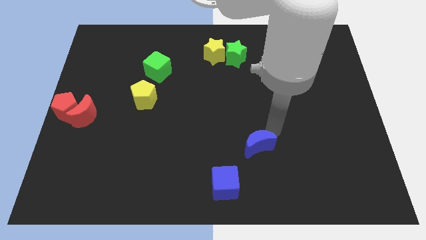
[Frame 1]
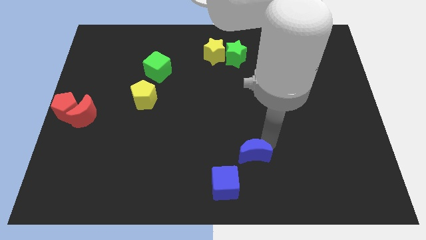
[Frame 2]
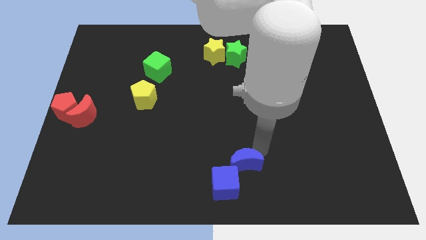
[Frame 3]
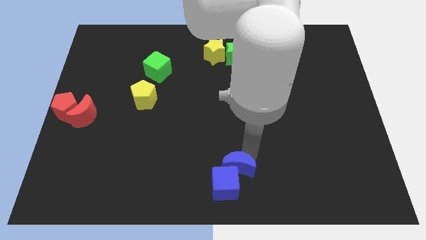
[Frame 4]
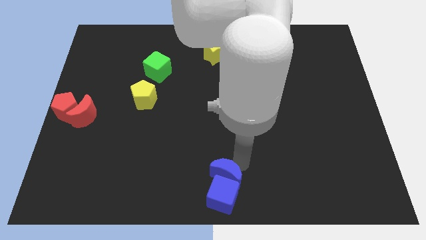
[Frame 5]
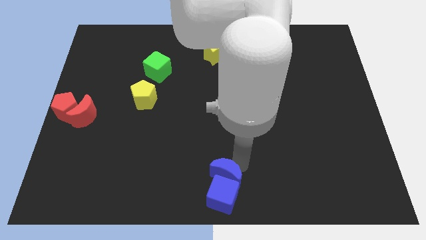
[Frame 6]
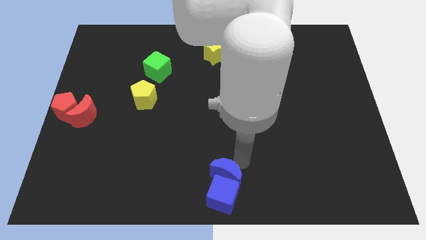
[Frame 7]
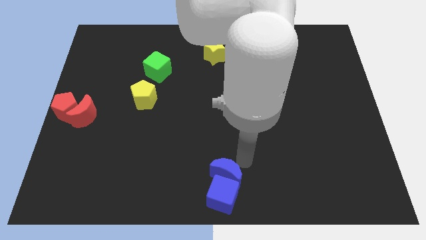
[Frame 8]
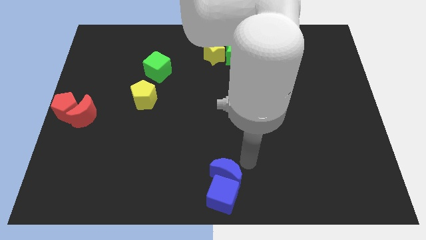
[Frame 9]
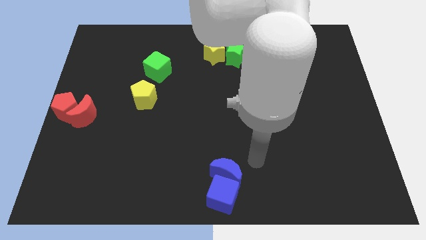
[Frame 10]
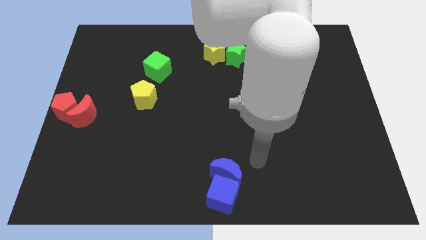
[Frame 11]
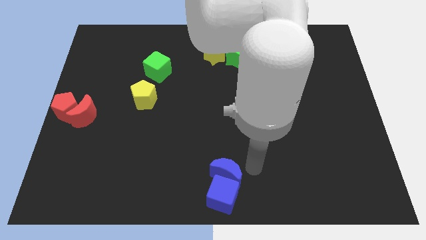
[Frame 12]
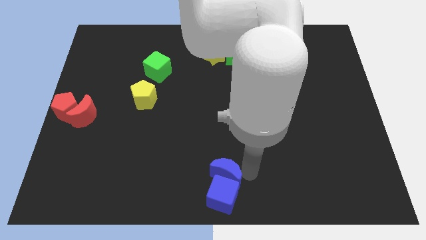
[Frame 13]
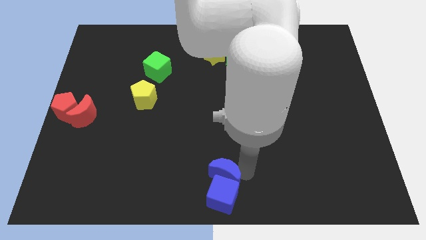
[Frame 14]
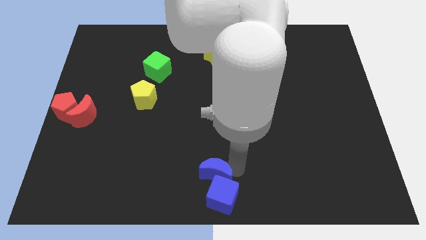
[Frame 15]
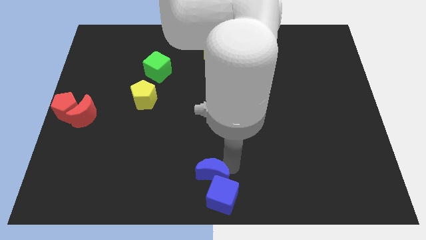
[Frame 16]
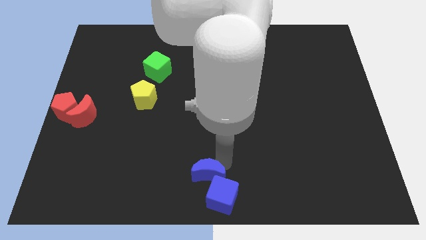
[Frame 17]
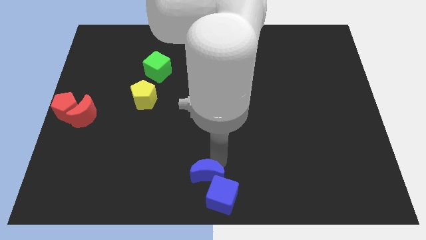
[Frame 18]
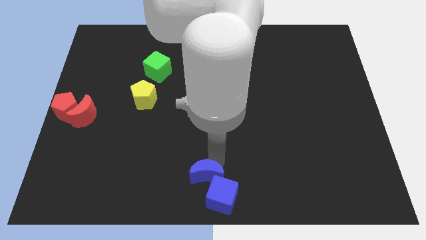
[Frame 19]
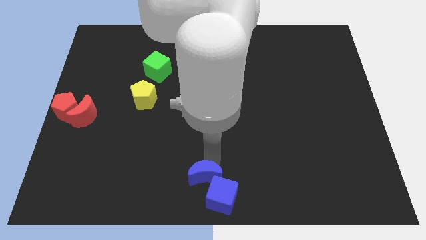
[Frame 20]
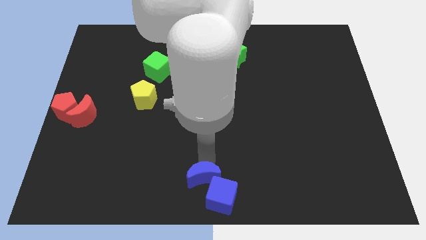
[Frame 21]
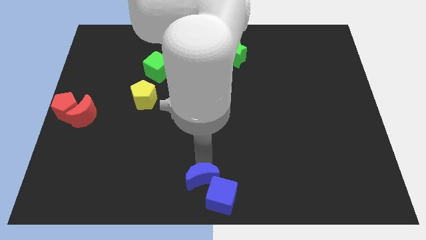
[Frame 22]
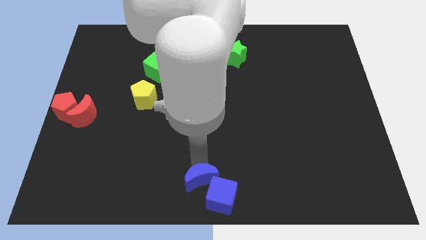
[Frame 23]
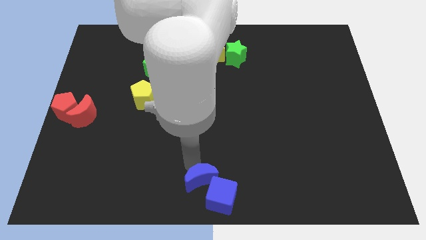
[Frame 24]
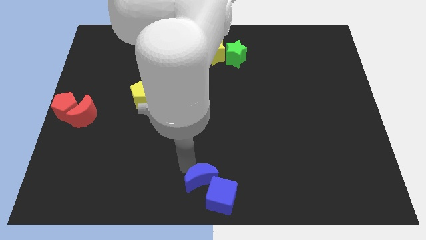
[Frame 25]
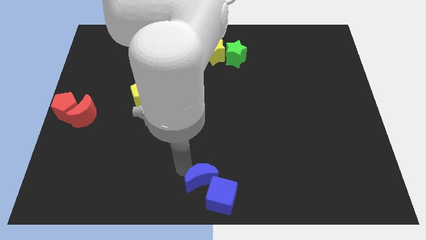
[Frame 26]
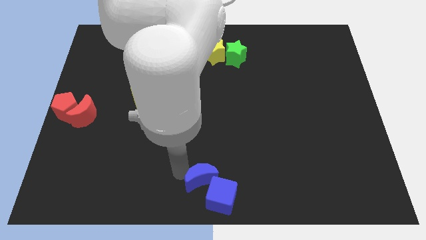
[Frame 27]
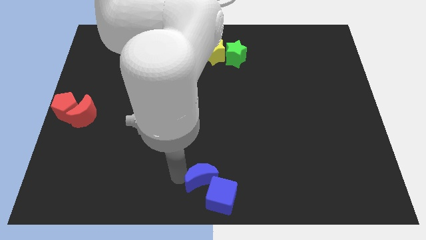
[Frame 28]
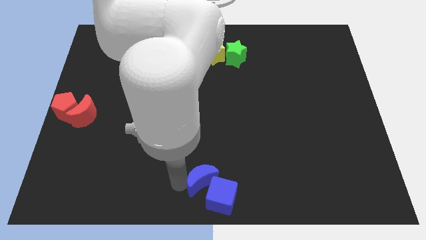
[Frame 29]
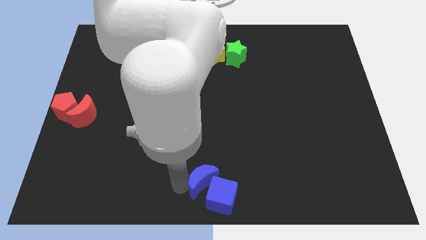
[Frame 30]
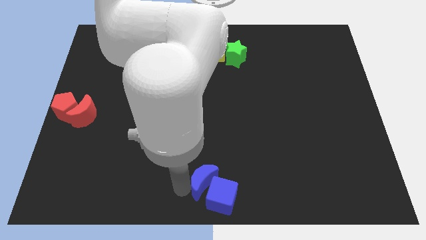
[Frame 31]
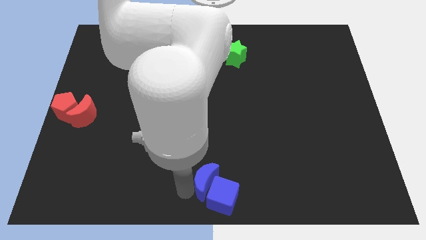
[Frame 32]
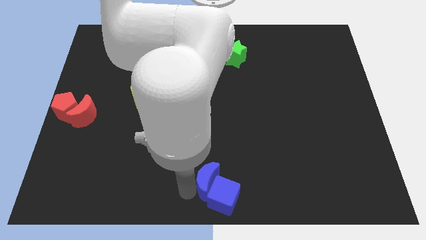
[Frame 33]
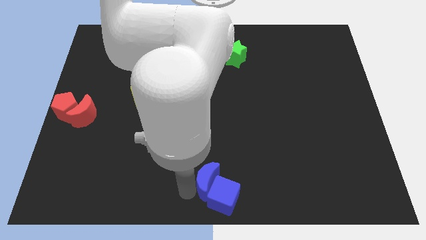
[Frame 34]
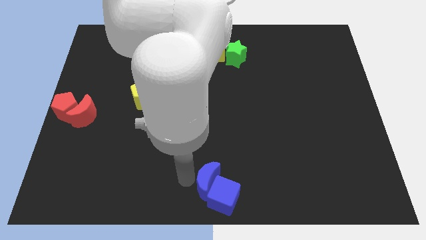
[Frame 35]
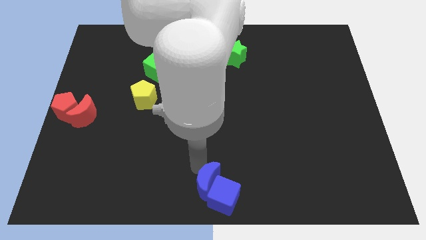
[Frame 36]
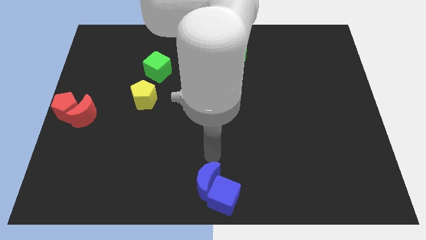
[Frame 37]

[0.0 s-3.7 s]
move blue moon into the blue cube

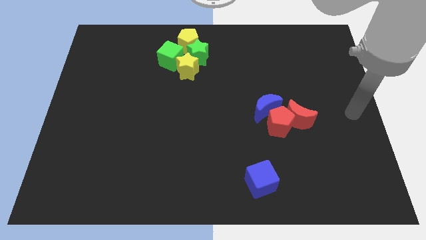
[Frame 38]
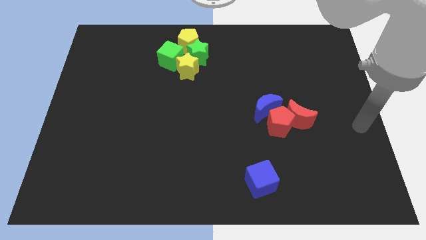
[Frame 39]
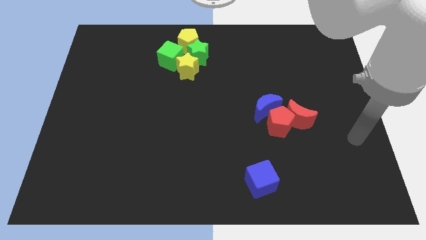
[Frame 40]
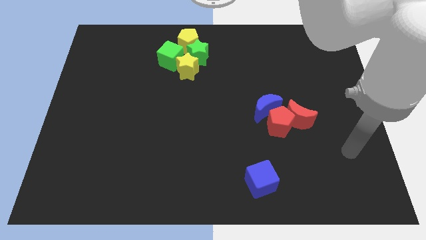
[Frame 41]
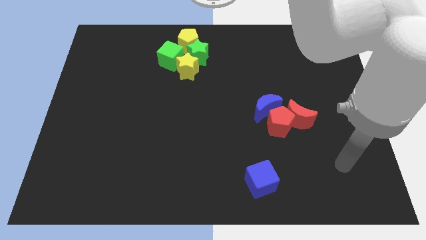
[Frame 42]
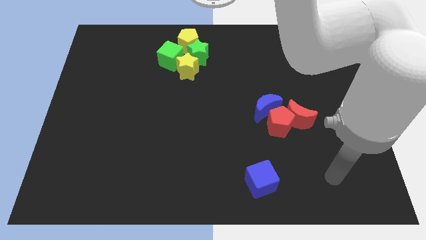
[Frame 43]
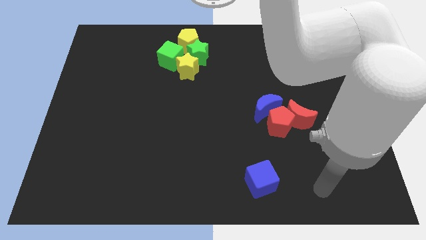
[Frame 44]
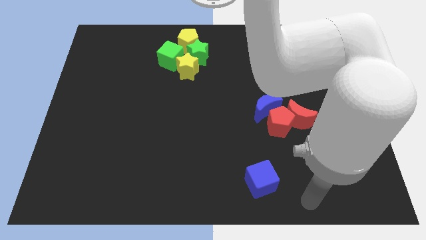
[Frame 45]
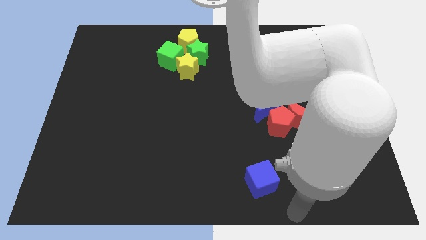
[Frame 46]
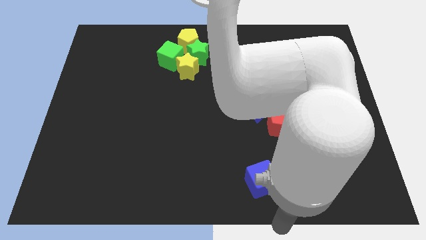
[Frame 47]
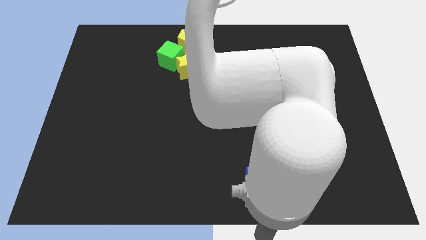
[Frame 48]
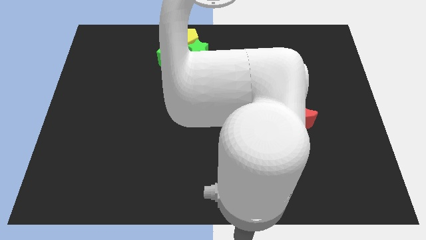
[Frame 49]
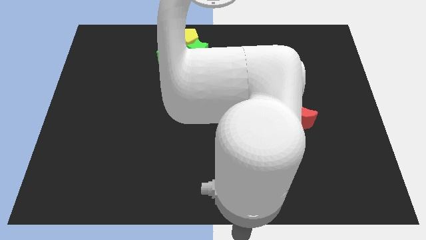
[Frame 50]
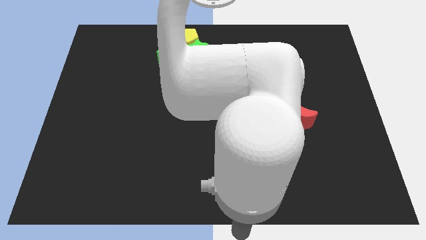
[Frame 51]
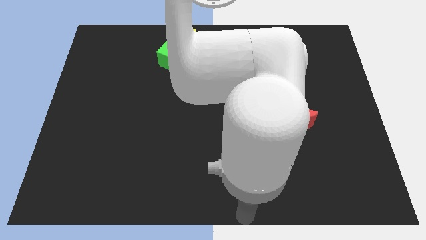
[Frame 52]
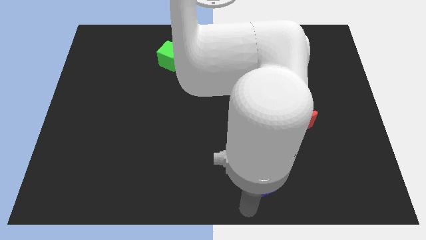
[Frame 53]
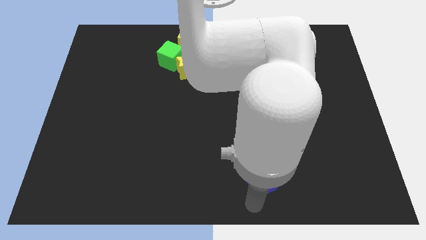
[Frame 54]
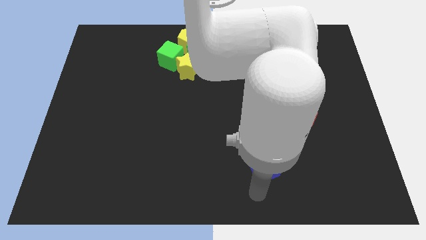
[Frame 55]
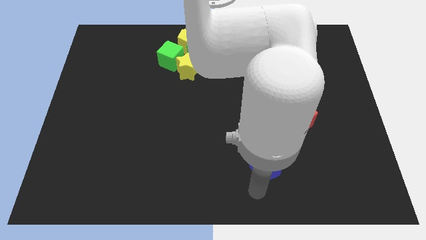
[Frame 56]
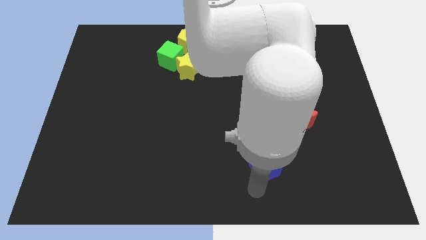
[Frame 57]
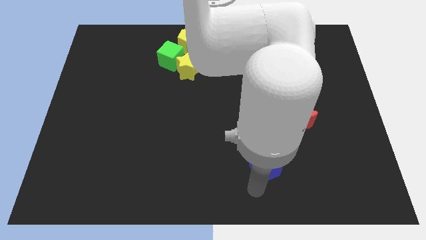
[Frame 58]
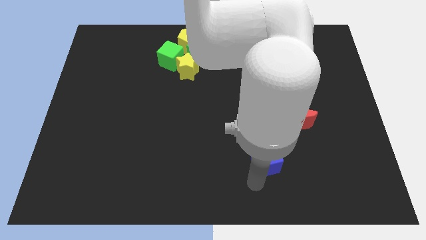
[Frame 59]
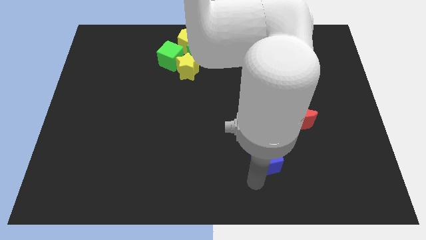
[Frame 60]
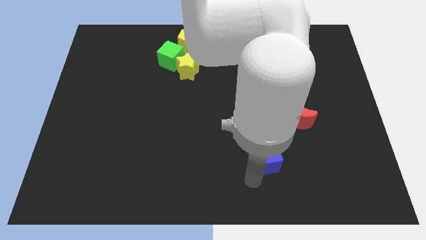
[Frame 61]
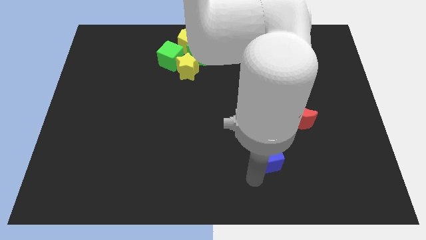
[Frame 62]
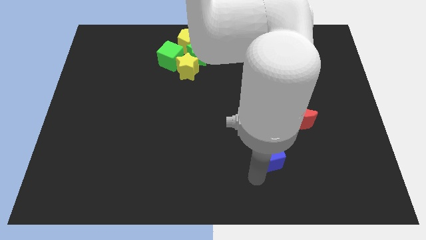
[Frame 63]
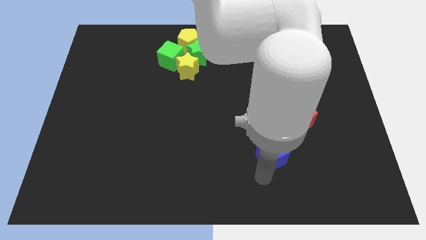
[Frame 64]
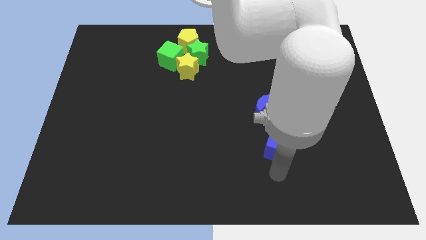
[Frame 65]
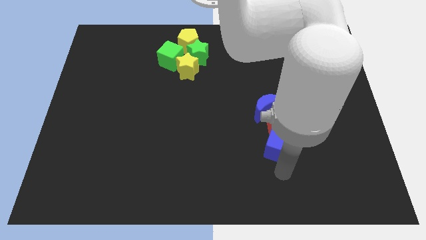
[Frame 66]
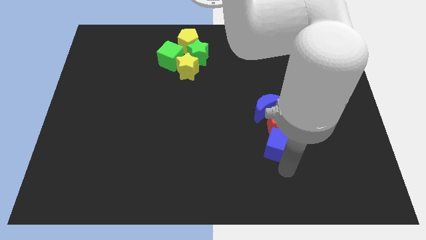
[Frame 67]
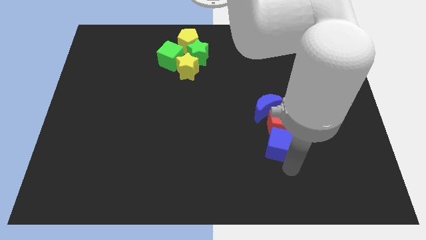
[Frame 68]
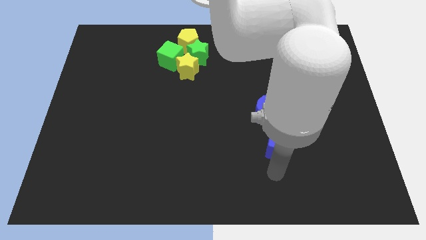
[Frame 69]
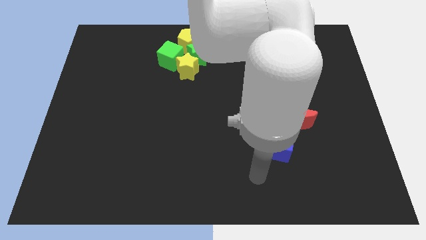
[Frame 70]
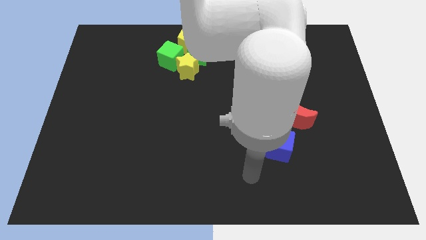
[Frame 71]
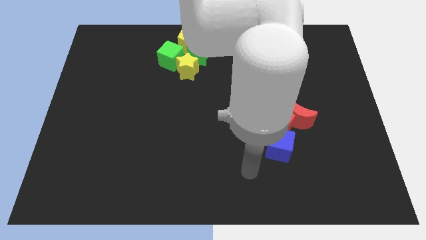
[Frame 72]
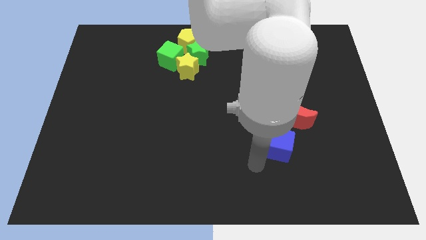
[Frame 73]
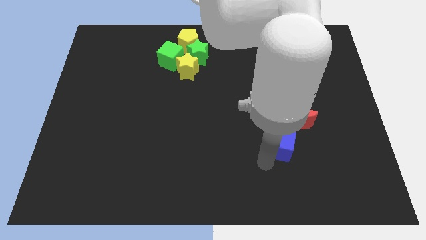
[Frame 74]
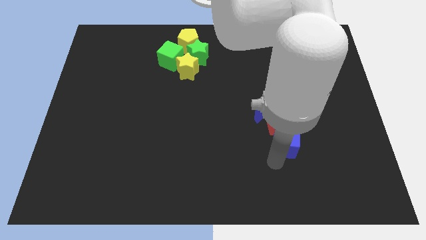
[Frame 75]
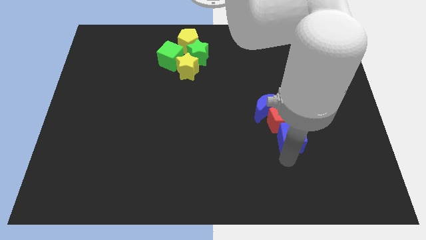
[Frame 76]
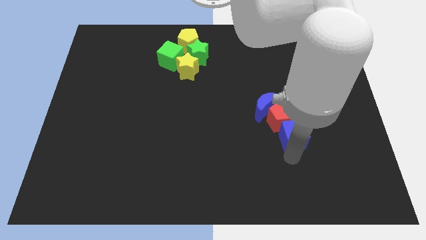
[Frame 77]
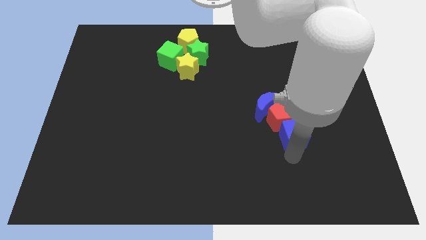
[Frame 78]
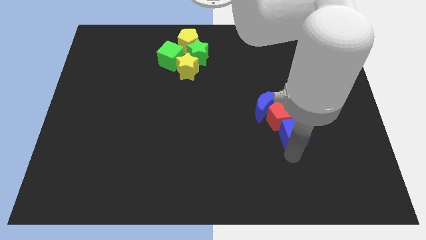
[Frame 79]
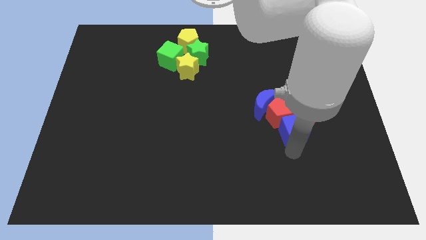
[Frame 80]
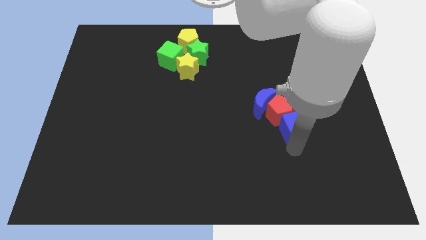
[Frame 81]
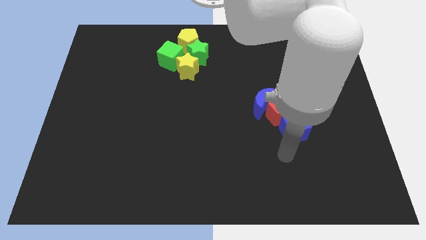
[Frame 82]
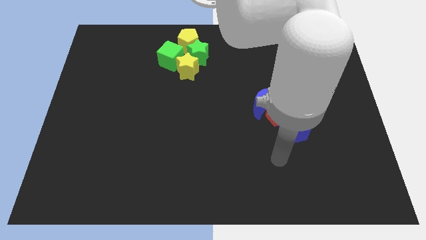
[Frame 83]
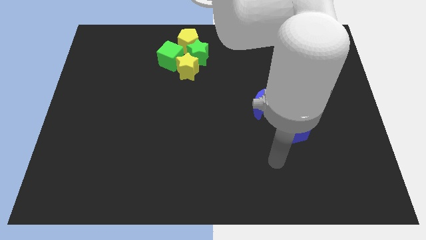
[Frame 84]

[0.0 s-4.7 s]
place blue cube below red pentagon

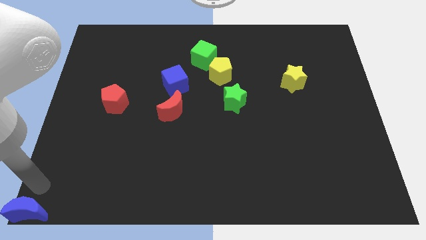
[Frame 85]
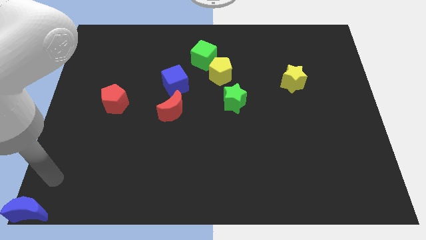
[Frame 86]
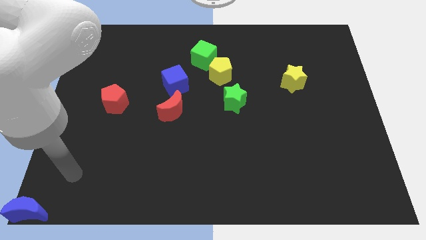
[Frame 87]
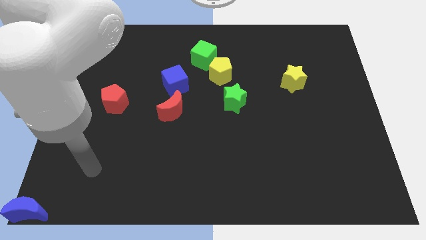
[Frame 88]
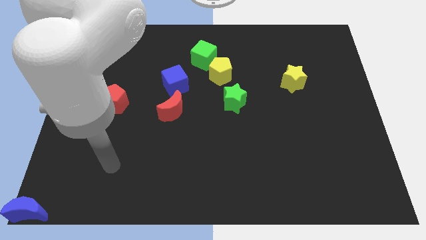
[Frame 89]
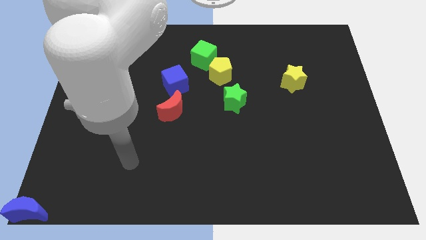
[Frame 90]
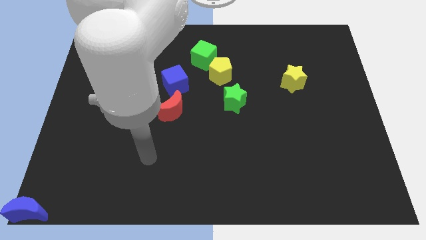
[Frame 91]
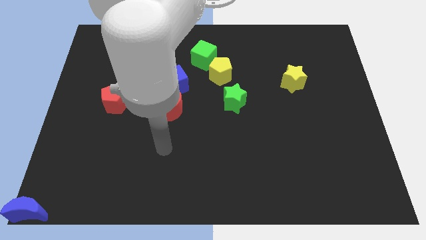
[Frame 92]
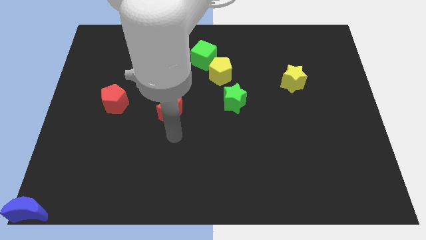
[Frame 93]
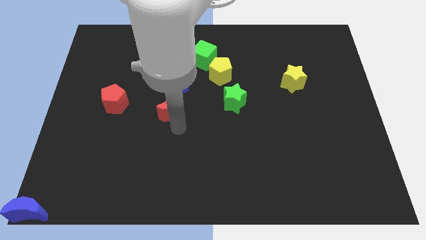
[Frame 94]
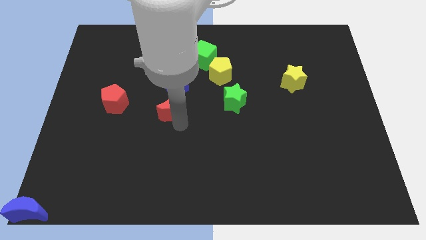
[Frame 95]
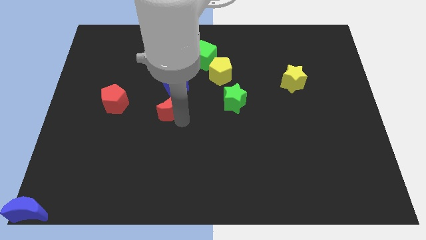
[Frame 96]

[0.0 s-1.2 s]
move your hand towards the bottom of the red crescent
